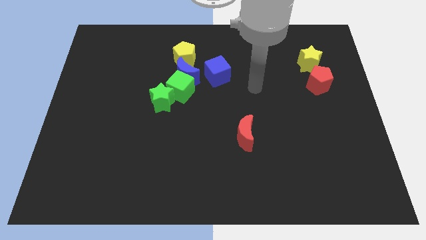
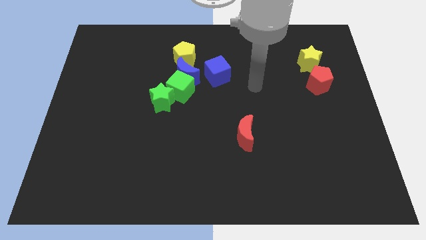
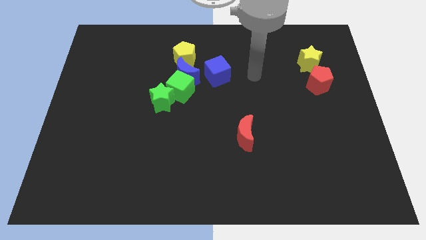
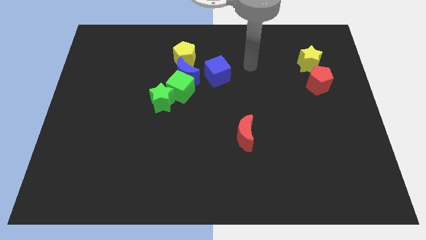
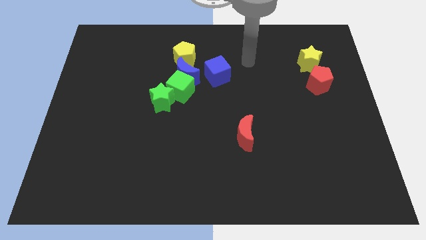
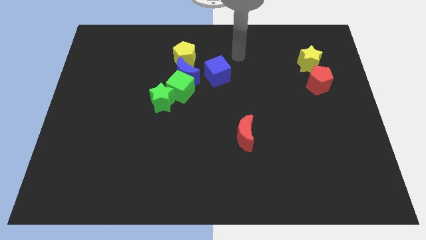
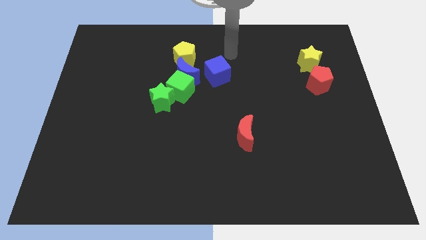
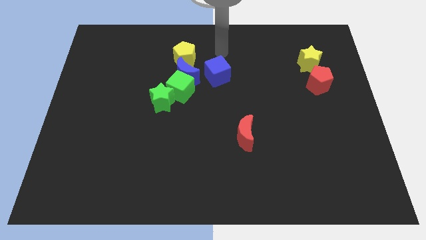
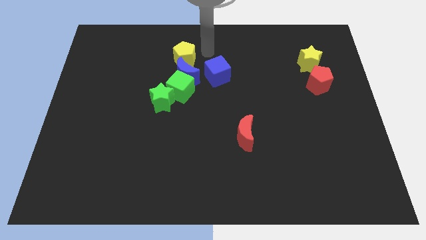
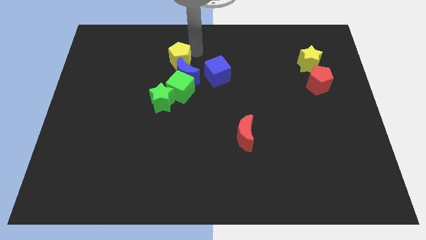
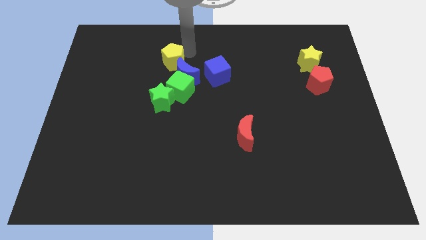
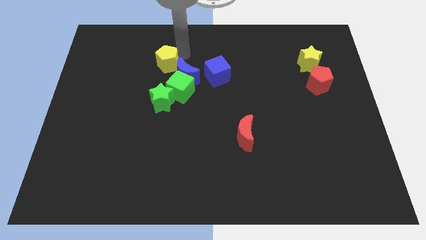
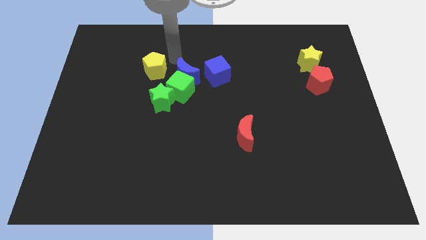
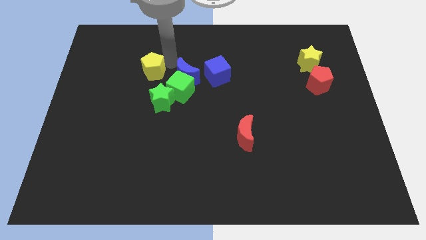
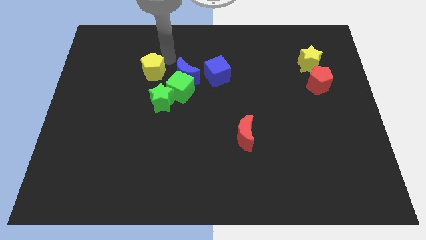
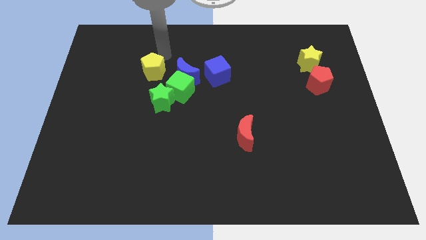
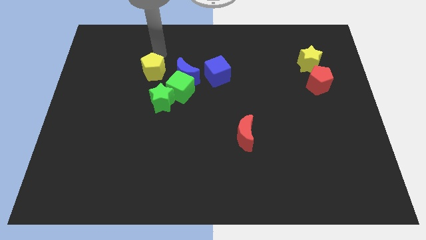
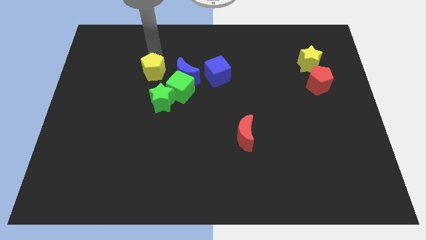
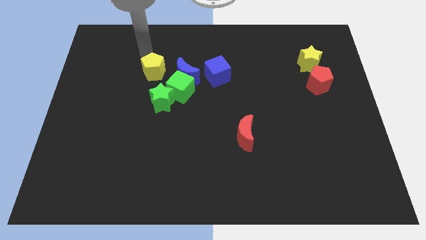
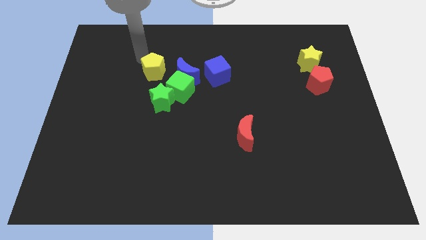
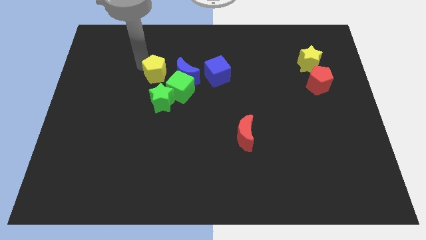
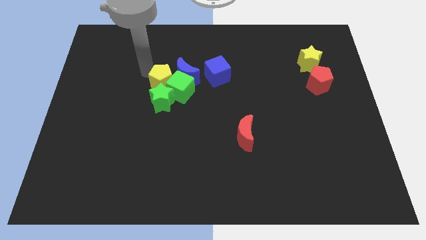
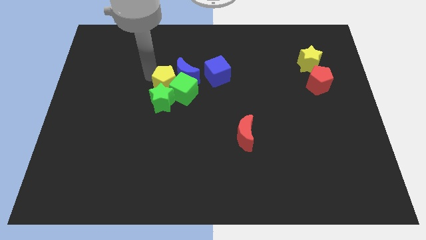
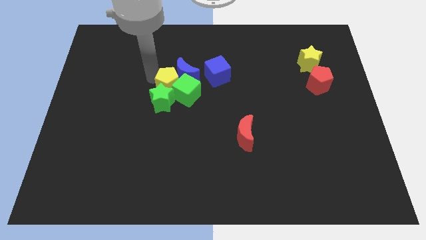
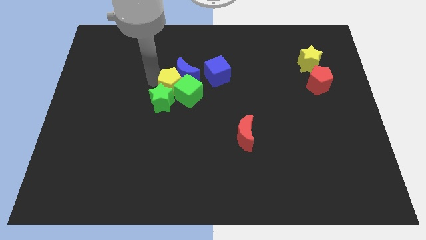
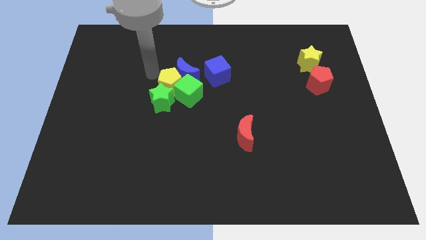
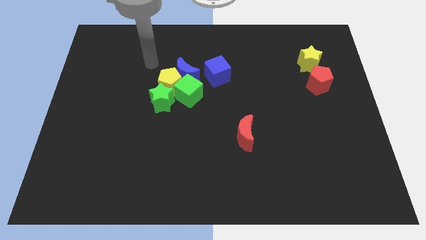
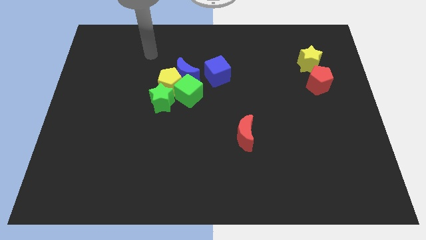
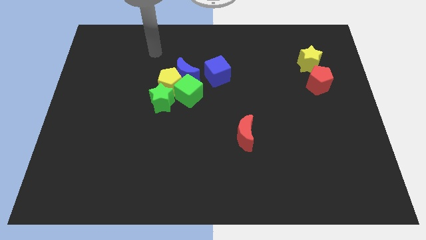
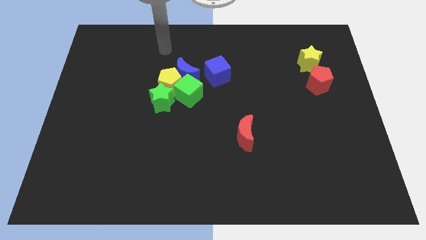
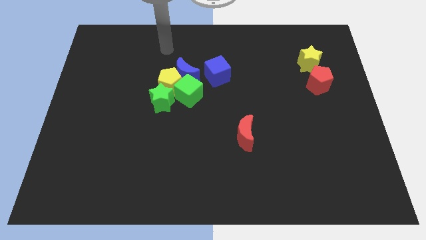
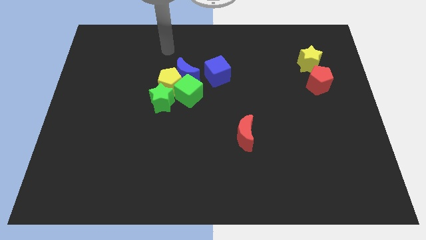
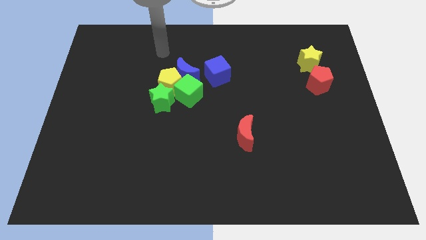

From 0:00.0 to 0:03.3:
move the yellow pentagon into the green cube

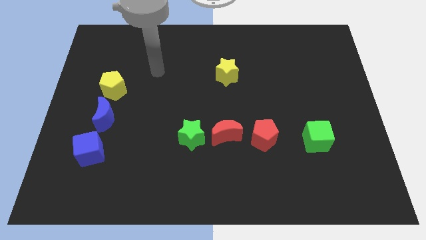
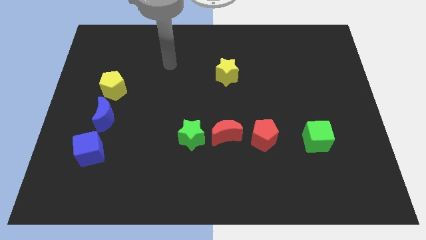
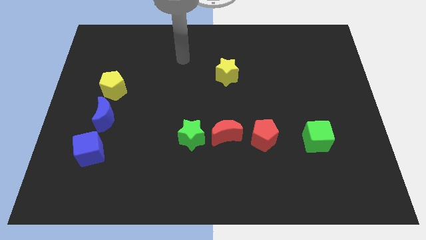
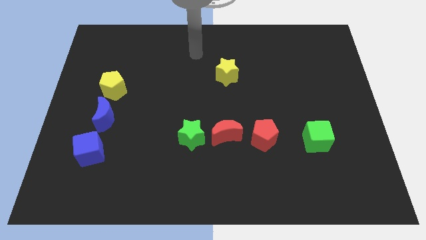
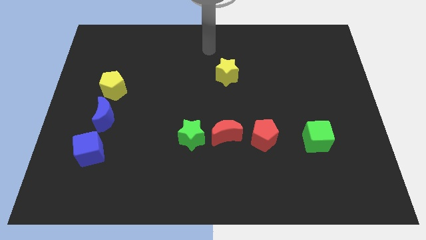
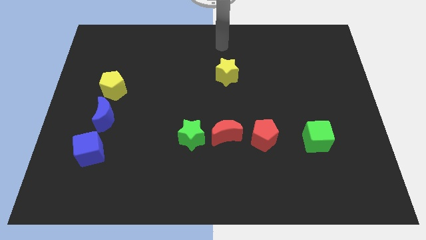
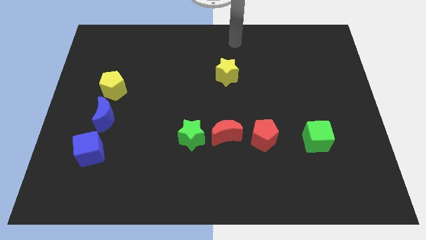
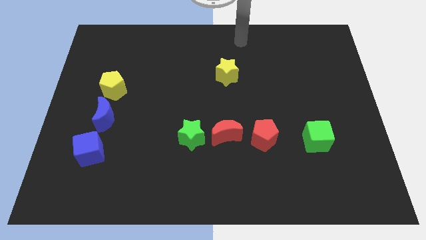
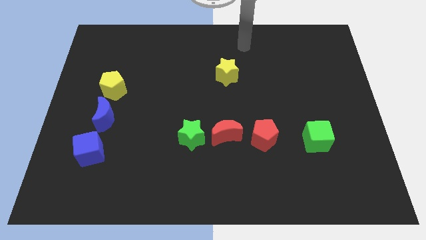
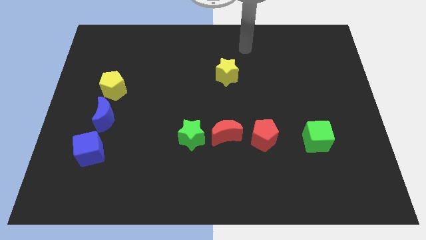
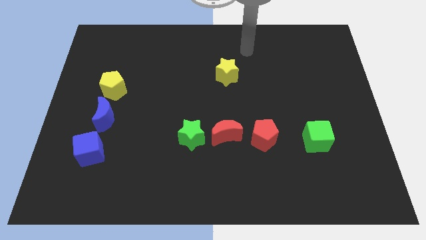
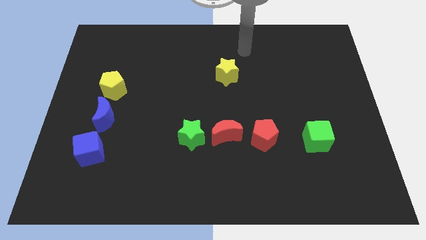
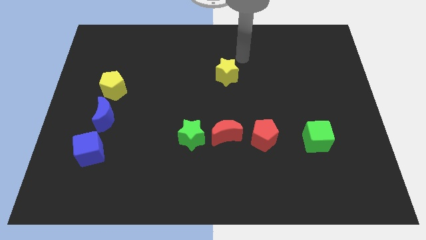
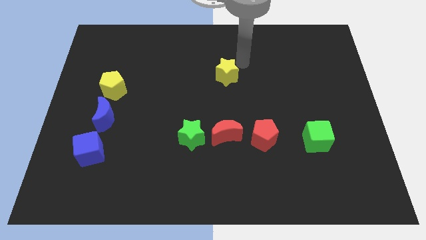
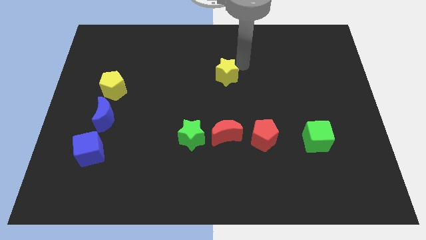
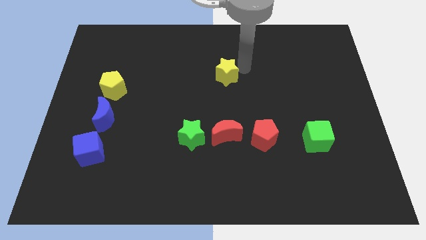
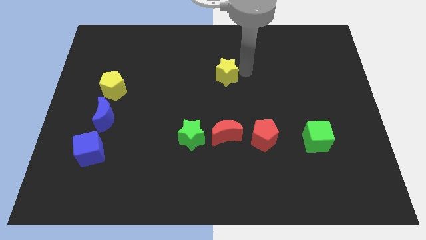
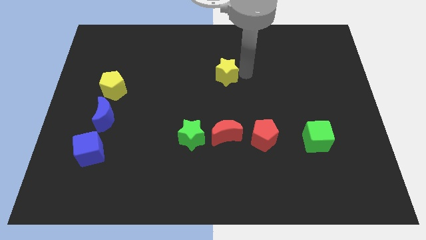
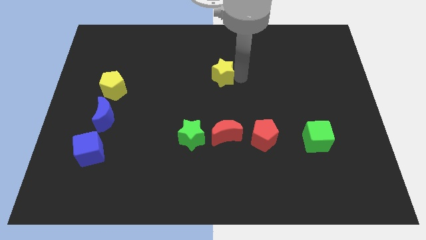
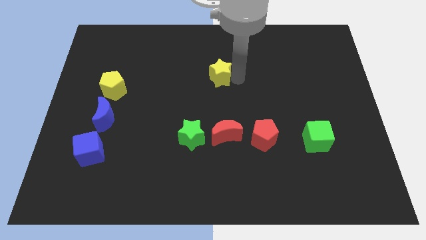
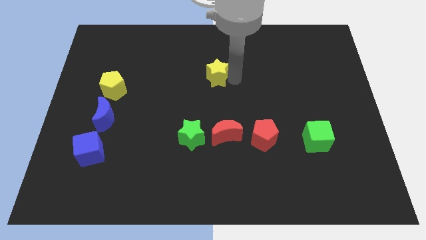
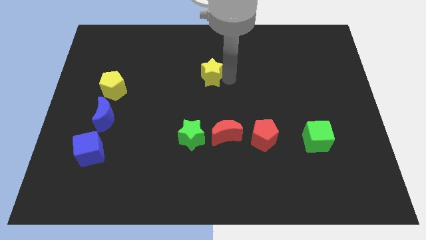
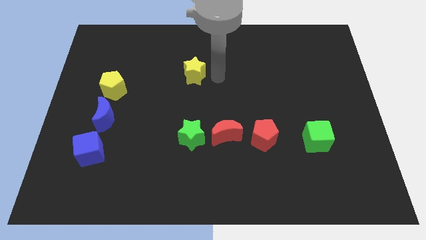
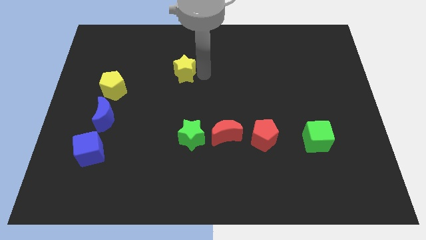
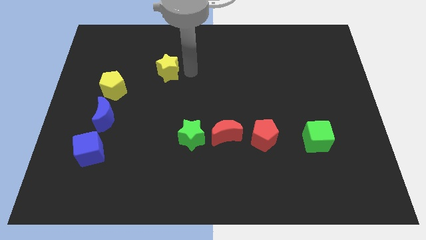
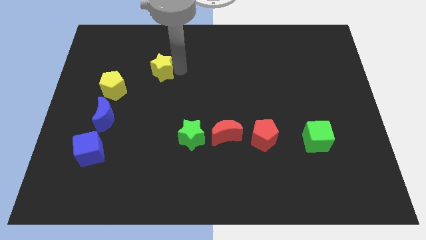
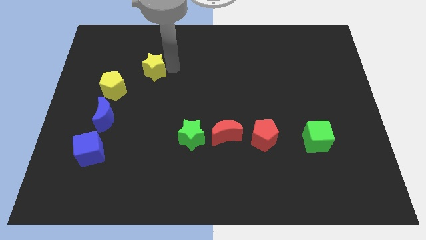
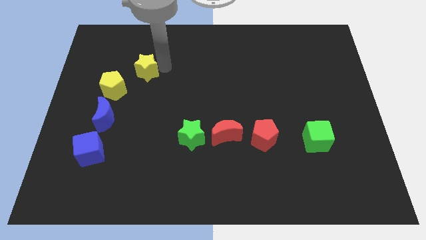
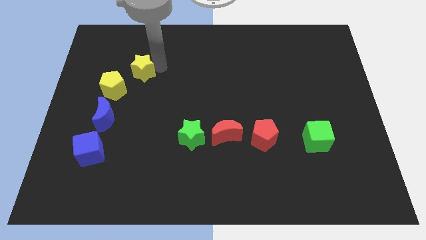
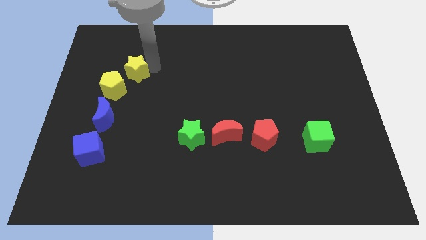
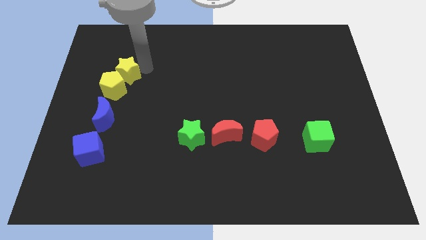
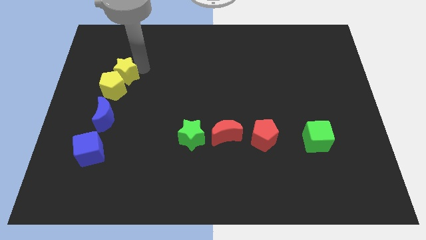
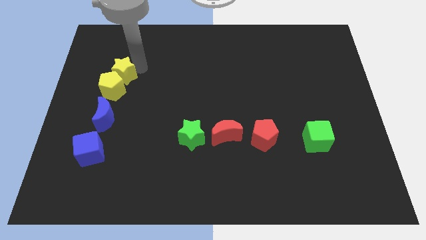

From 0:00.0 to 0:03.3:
place the yellow star towards the top of the yellow pentagon

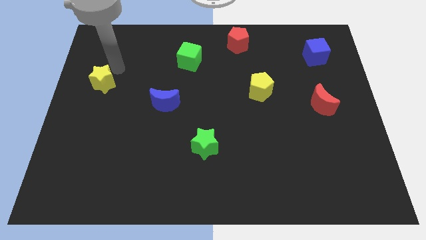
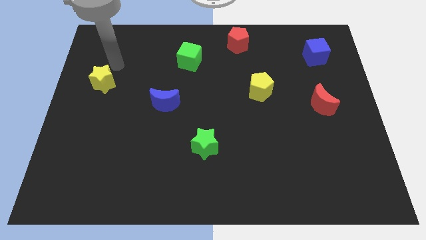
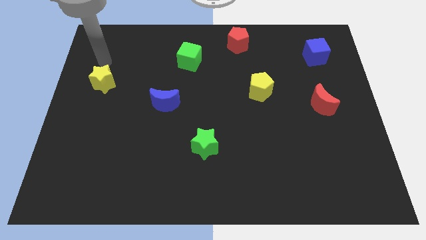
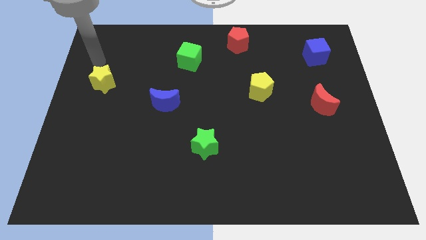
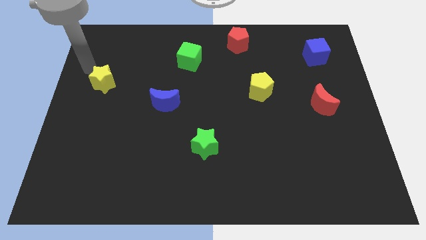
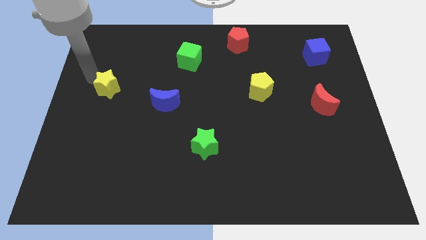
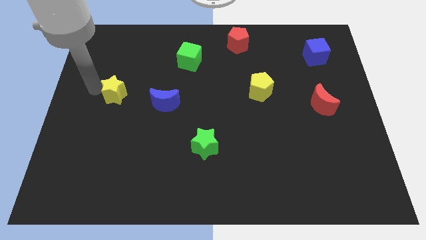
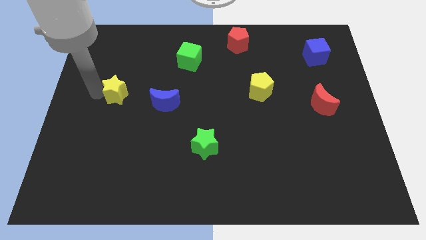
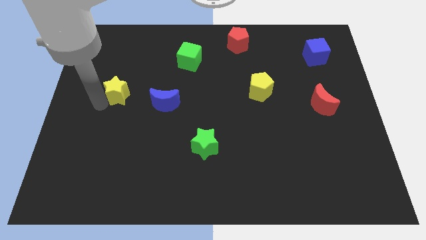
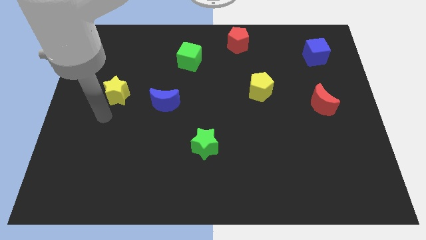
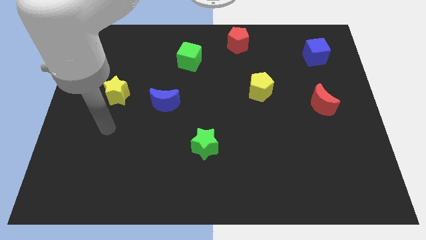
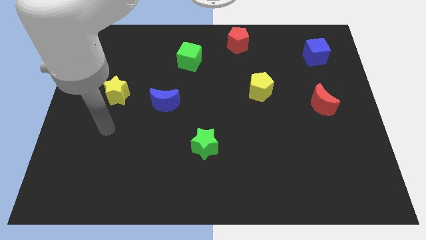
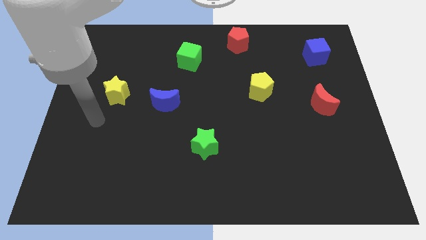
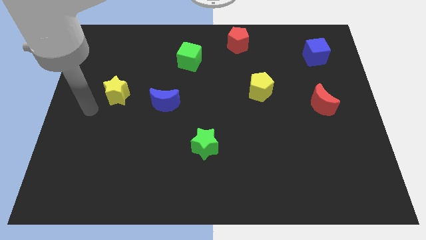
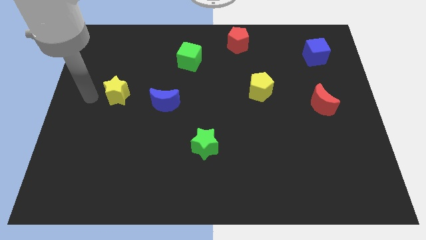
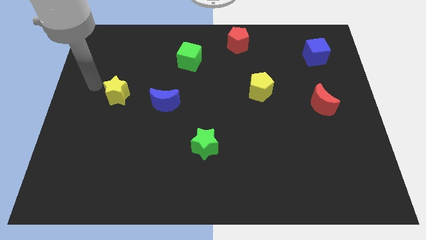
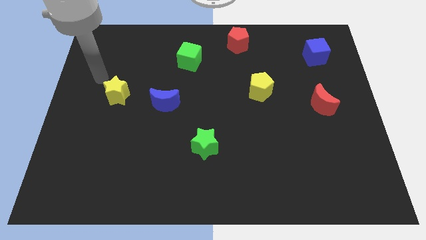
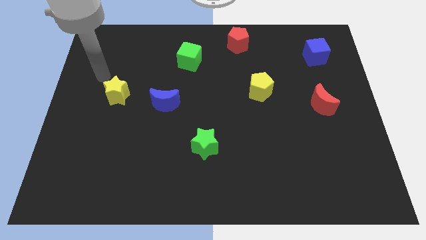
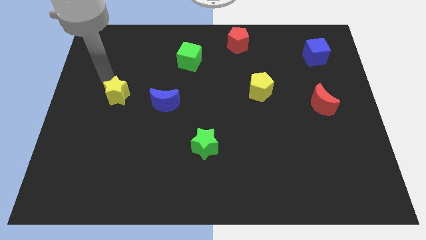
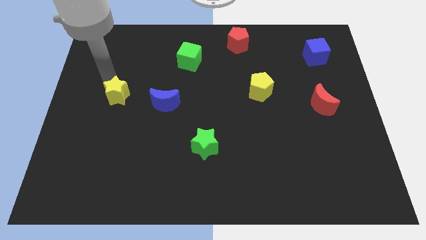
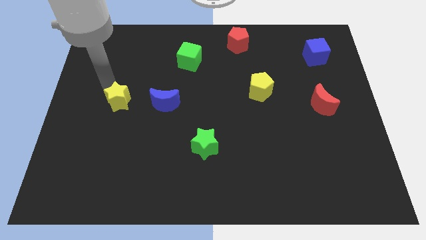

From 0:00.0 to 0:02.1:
push the yellow star to the left side of the blue moon

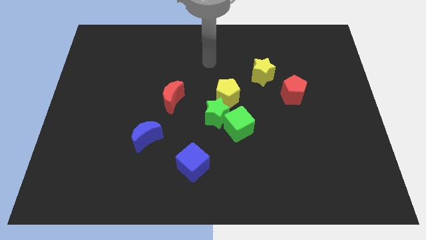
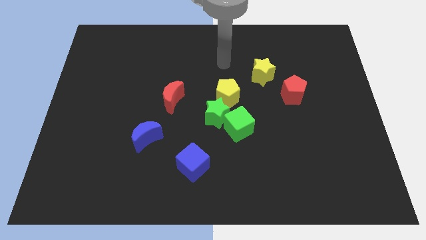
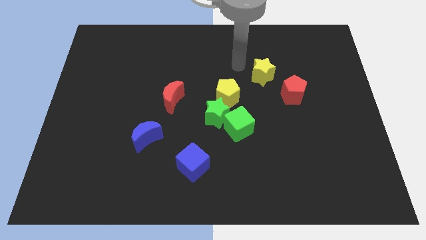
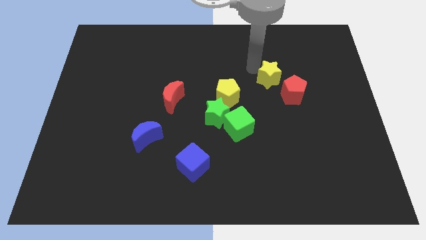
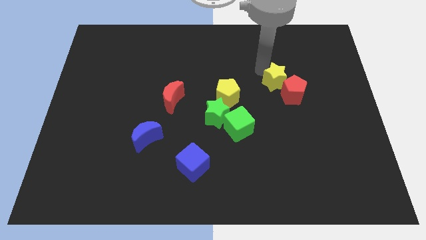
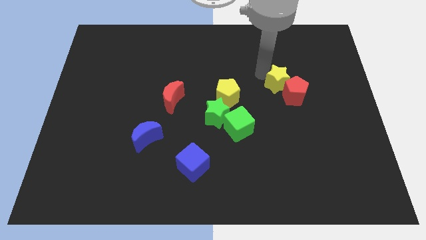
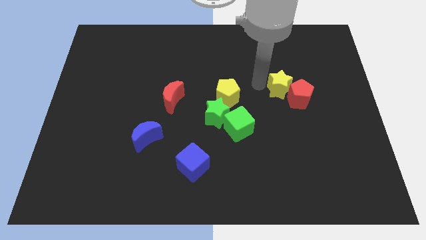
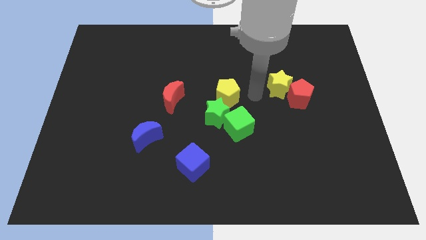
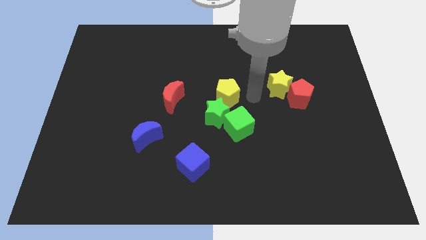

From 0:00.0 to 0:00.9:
move the yellow star close to the red pentagon
